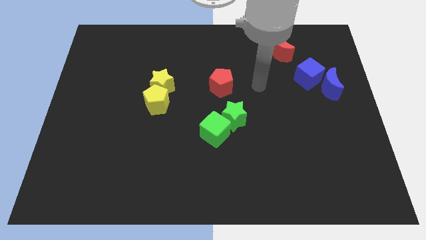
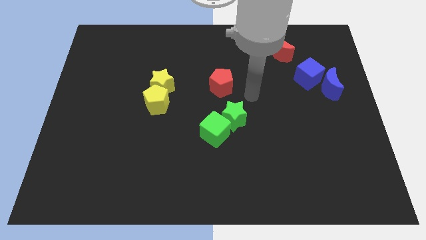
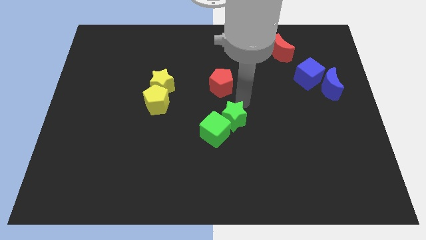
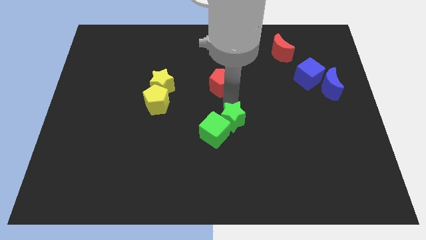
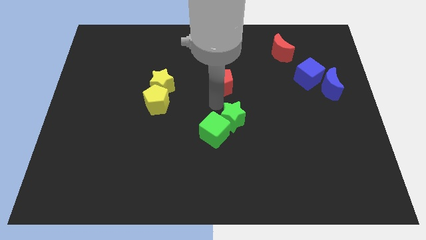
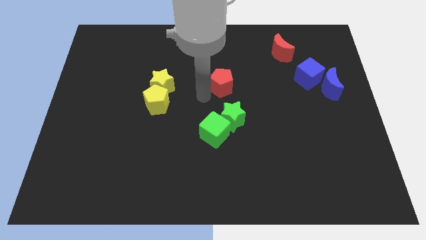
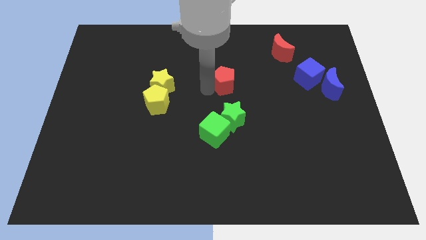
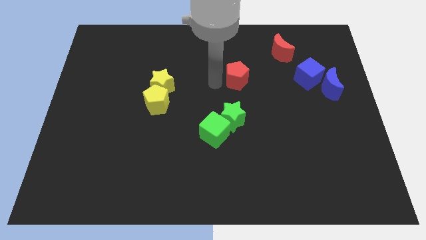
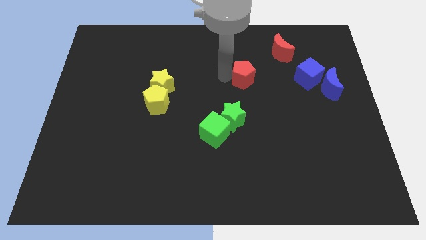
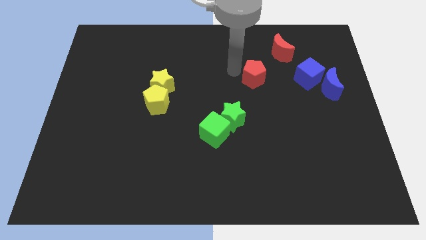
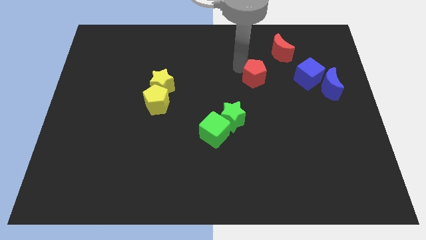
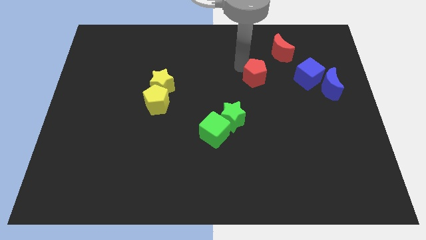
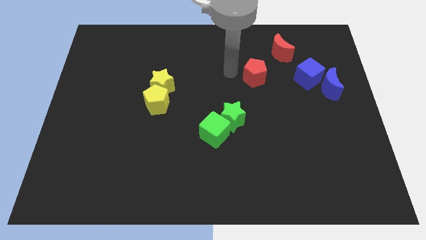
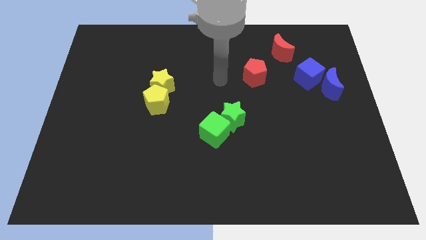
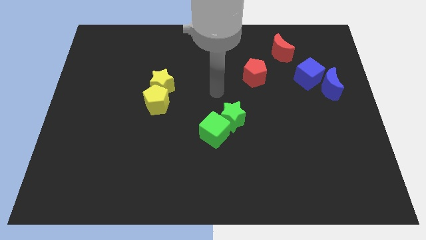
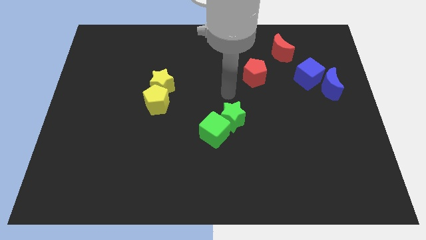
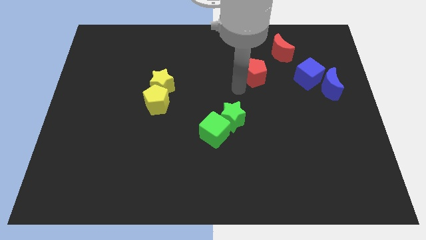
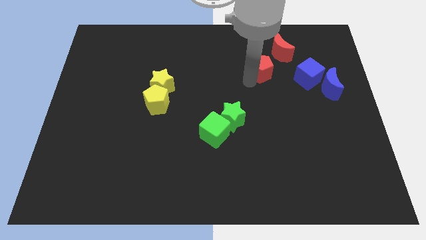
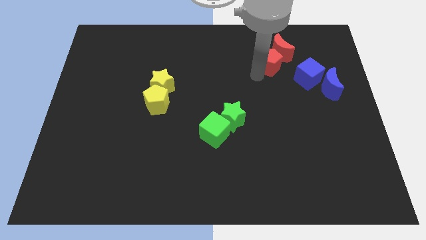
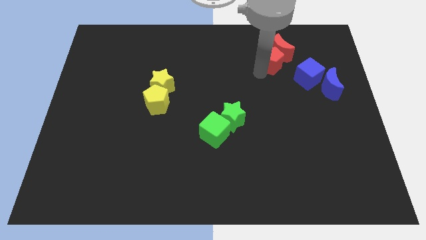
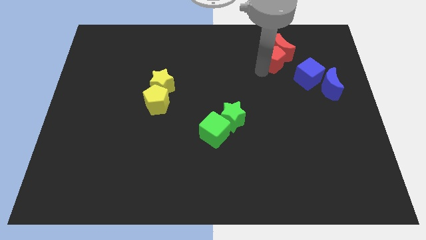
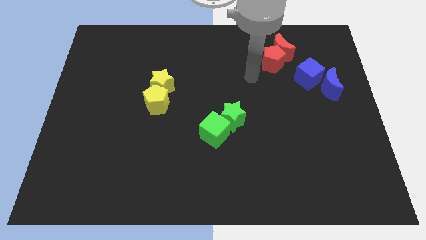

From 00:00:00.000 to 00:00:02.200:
slide red pentagon into red moon

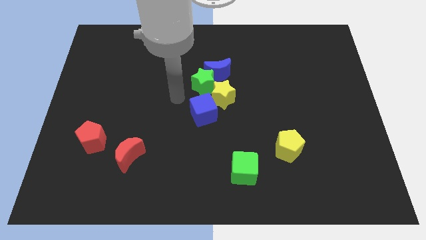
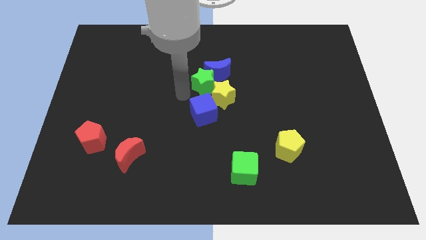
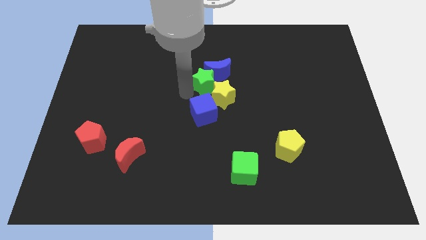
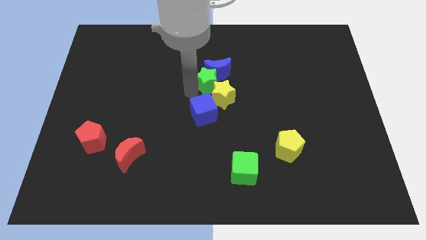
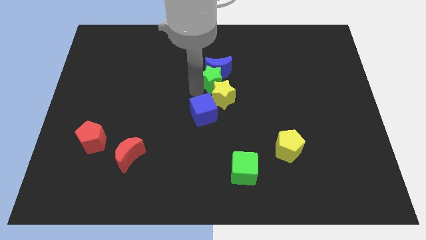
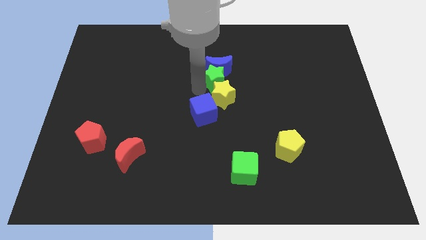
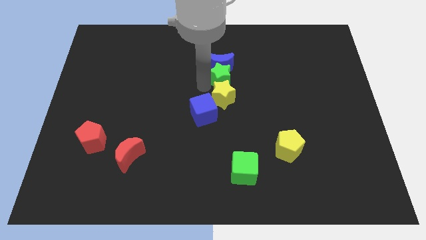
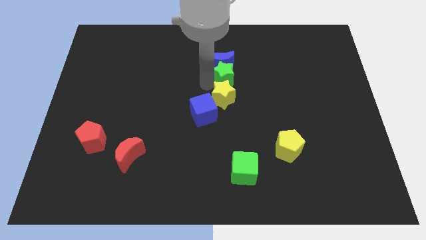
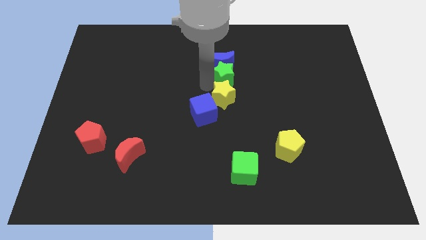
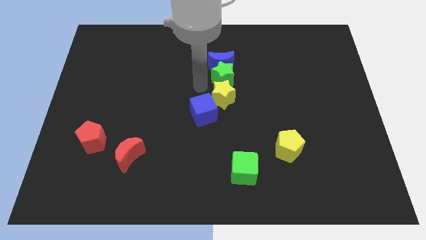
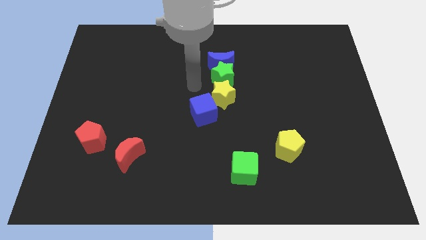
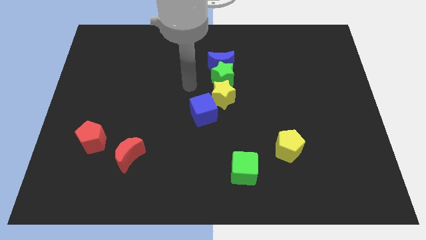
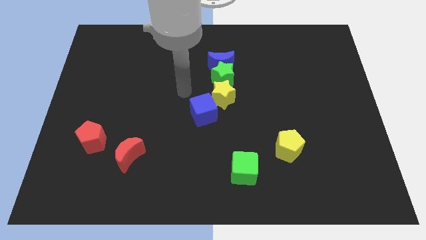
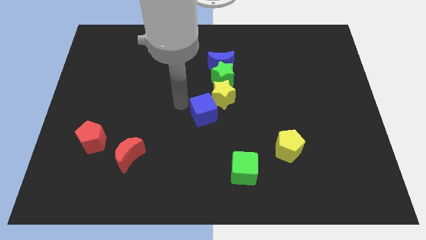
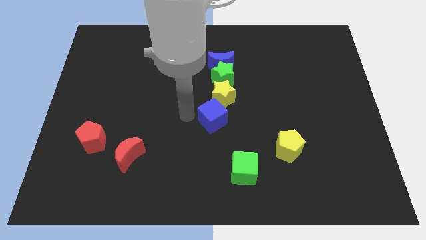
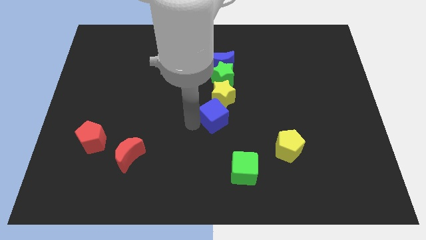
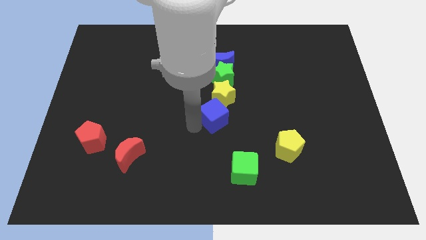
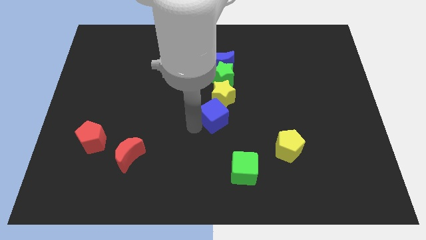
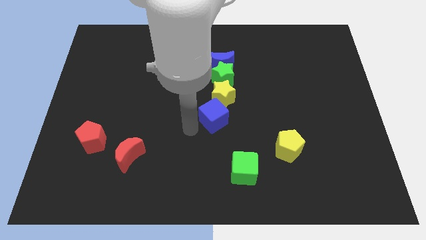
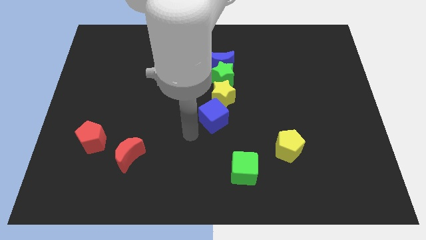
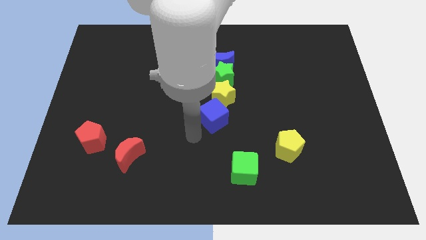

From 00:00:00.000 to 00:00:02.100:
push the green star in between the yellow star and the blue crescent

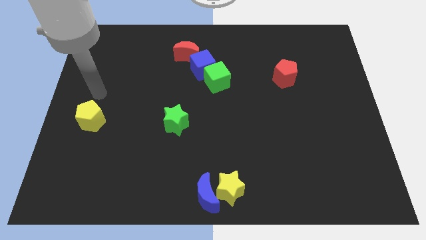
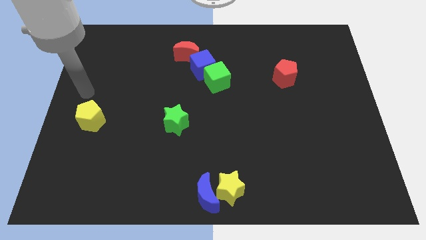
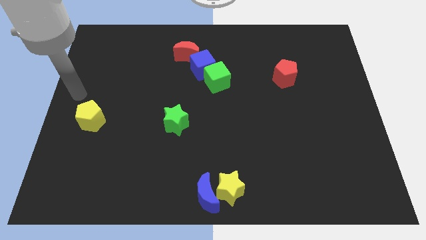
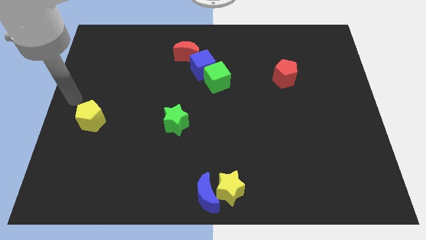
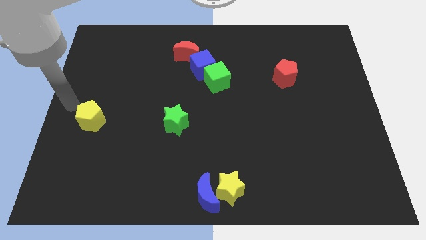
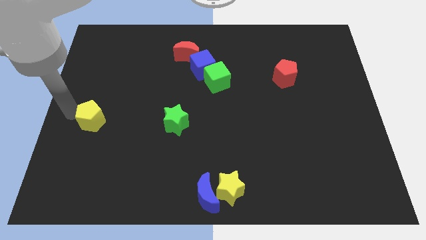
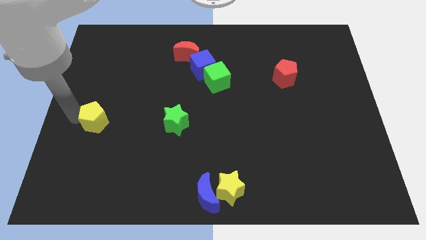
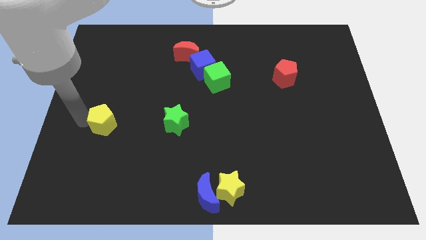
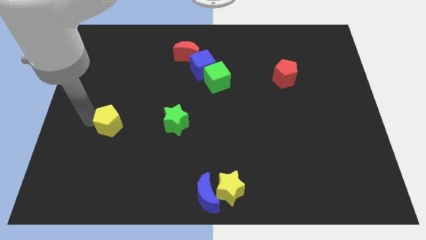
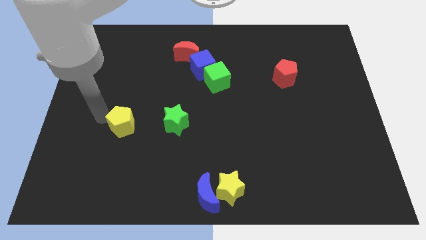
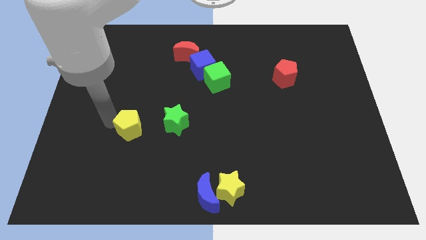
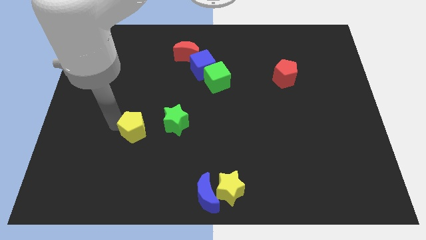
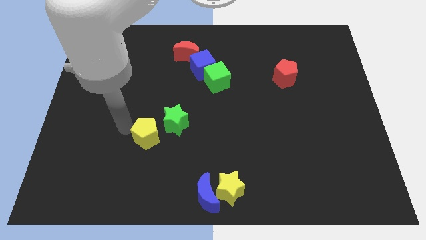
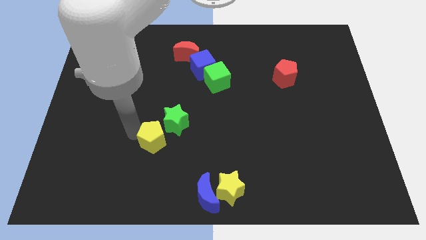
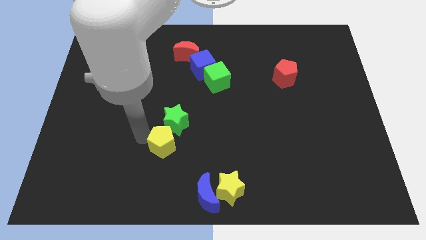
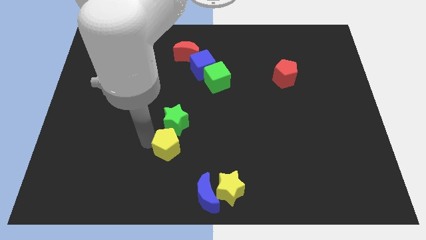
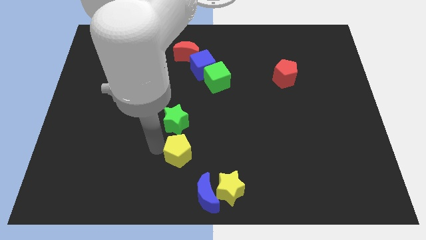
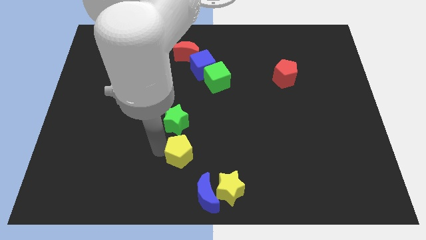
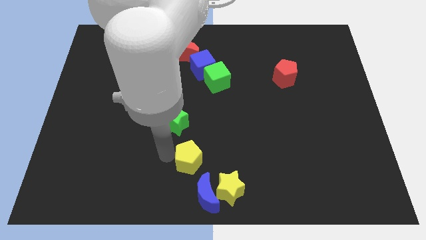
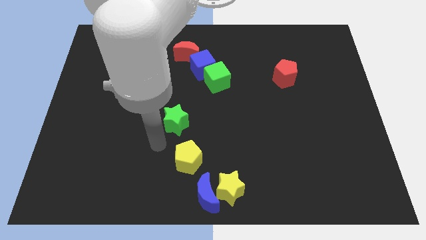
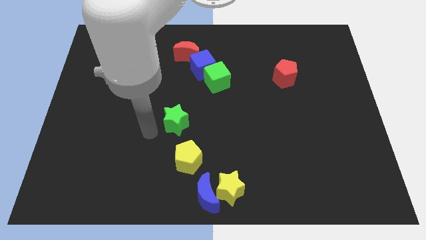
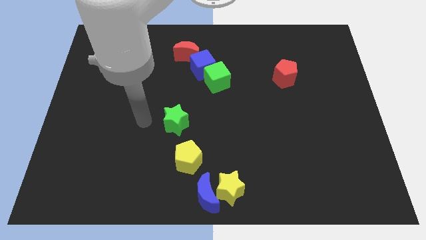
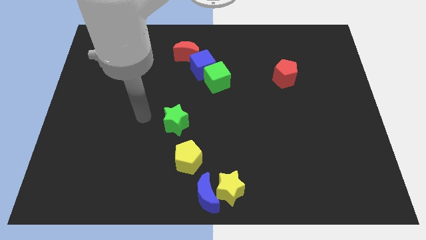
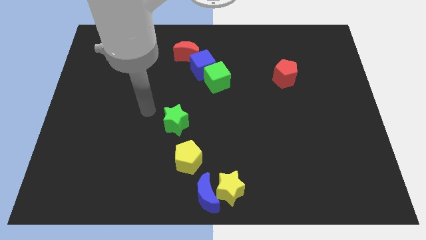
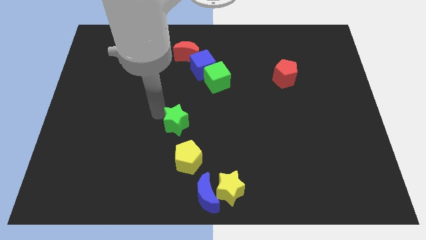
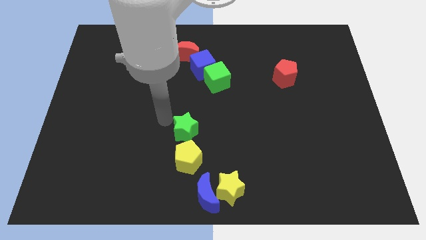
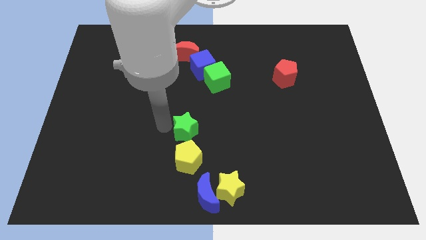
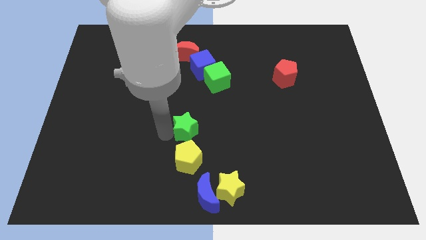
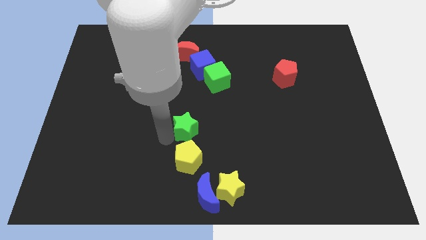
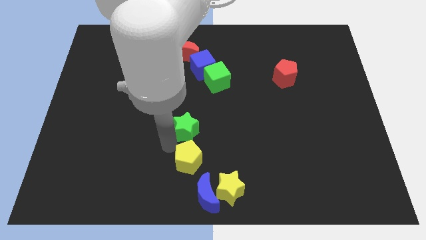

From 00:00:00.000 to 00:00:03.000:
push the yellow pentagon towards the blue semicircle

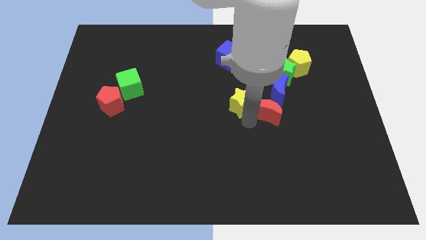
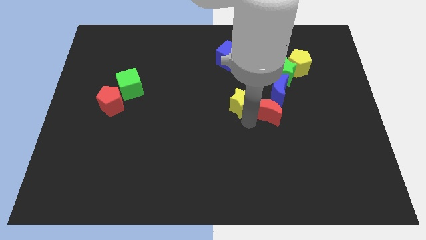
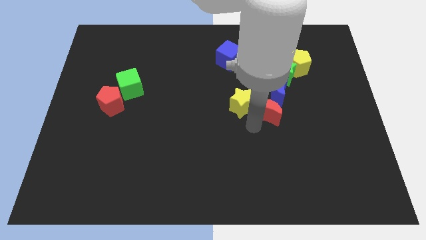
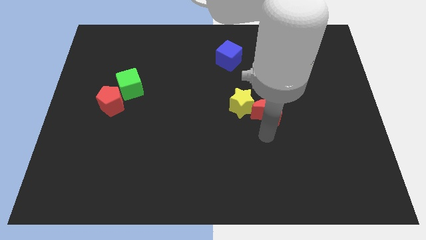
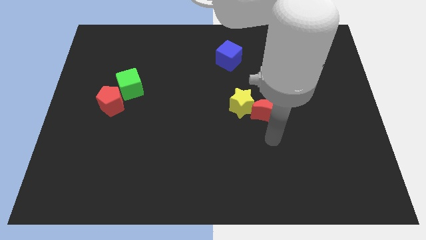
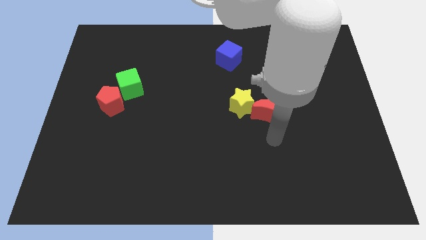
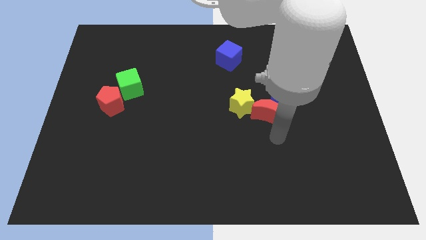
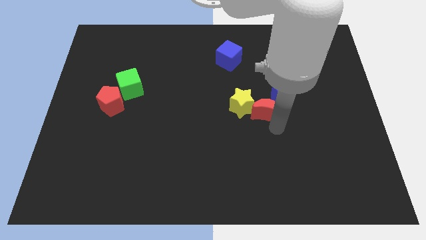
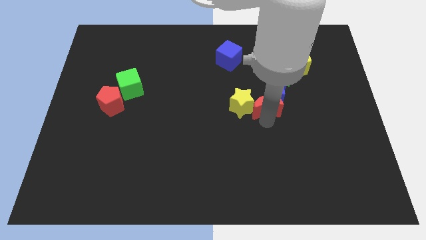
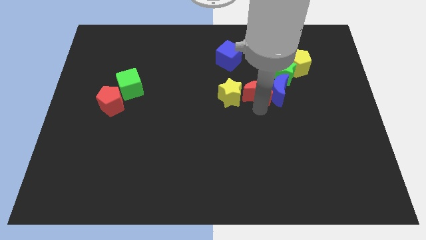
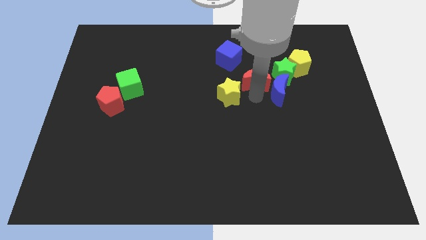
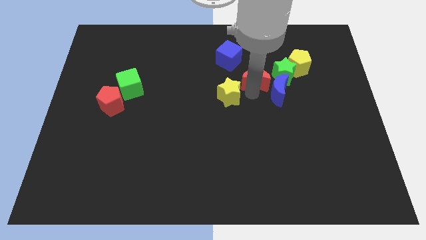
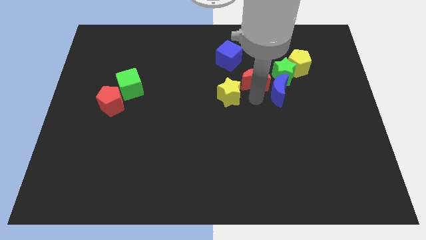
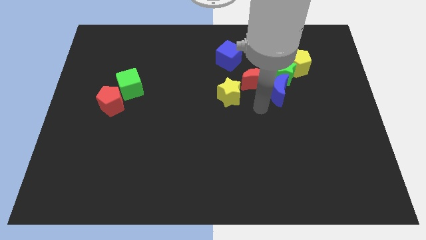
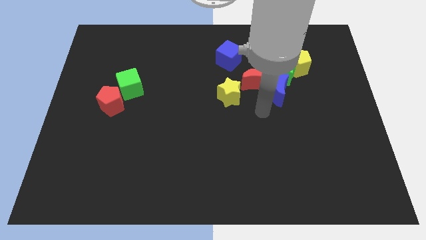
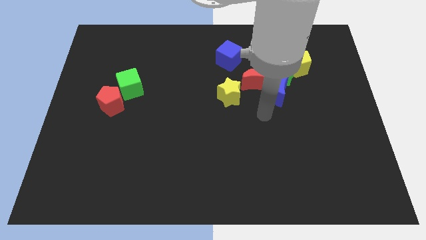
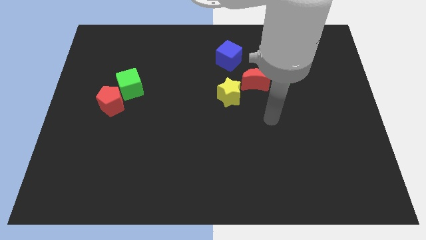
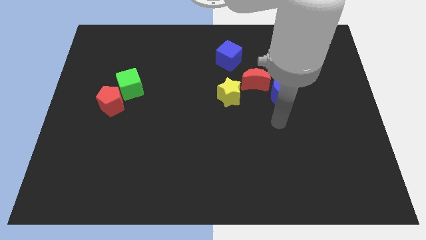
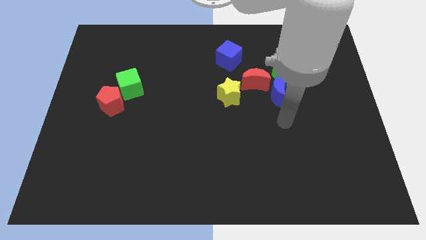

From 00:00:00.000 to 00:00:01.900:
push the red moon towards the top right of the yellow star
